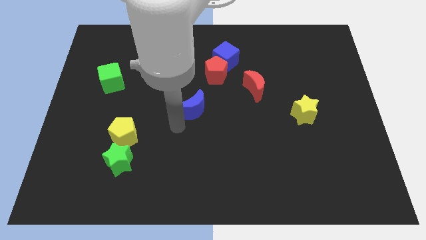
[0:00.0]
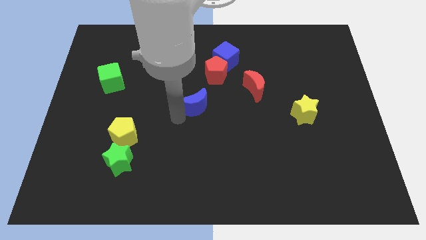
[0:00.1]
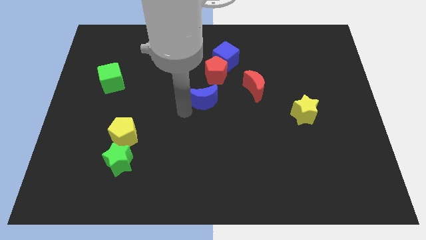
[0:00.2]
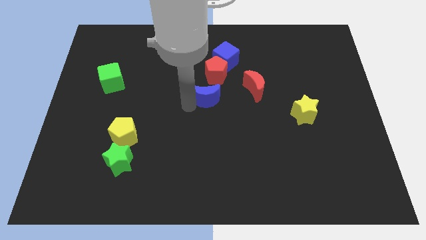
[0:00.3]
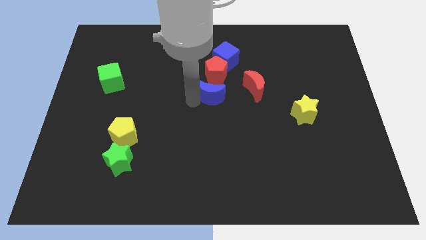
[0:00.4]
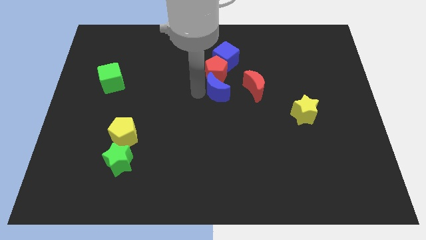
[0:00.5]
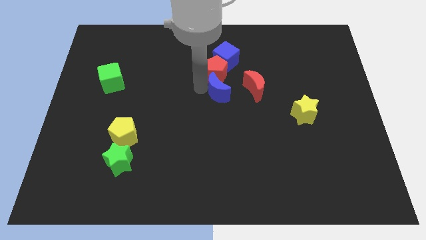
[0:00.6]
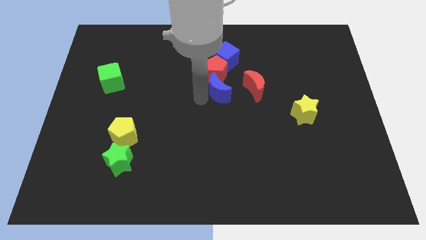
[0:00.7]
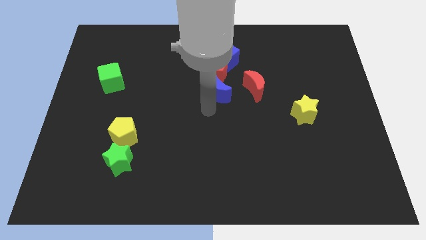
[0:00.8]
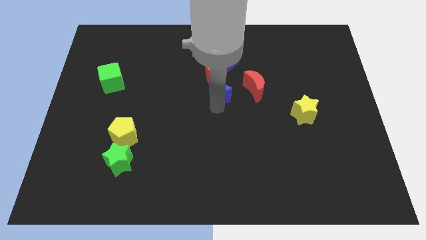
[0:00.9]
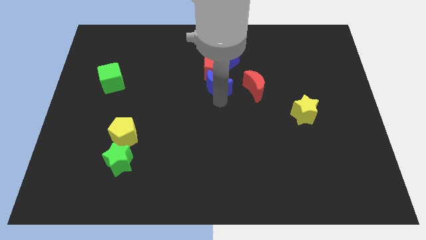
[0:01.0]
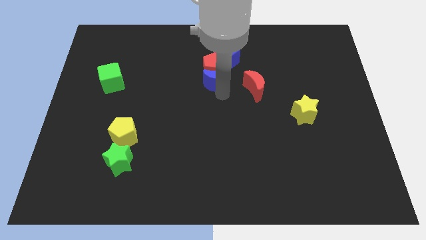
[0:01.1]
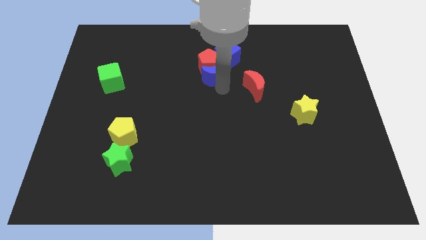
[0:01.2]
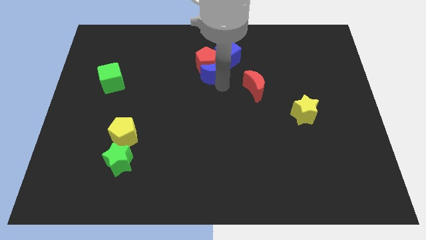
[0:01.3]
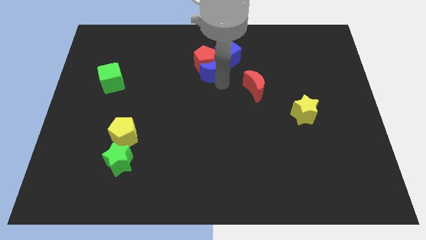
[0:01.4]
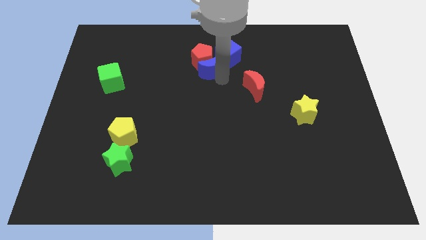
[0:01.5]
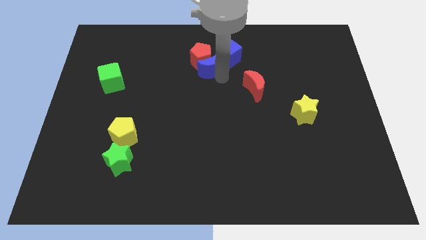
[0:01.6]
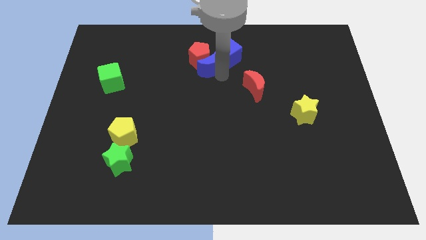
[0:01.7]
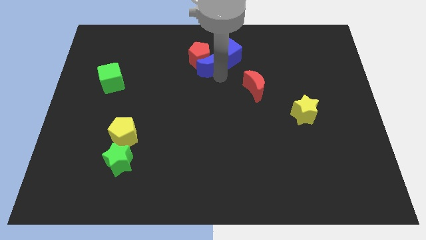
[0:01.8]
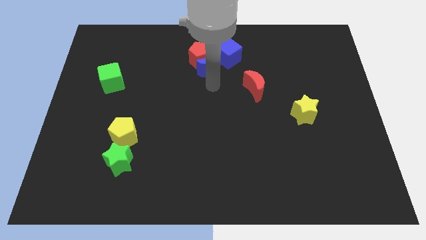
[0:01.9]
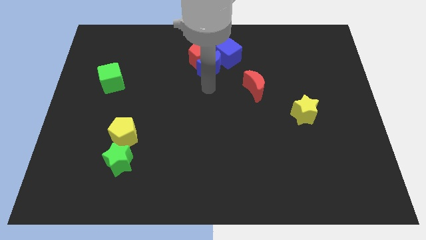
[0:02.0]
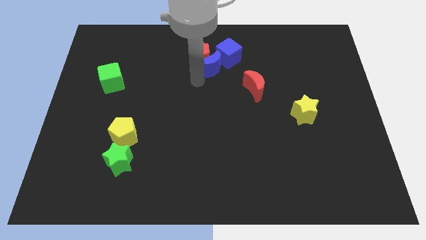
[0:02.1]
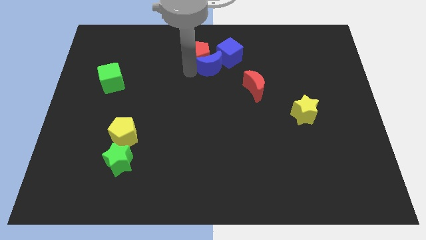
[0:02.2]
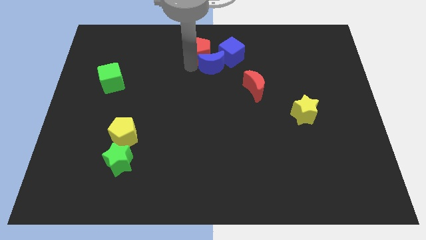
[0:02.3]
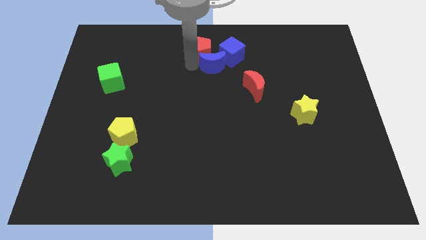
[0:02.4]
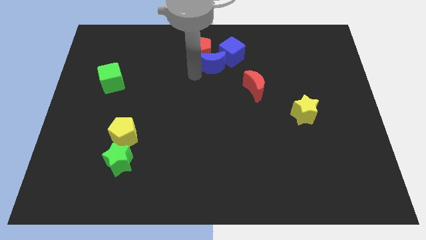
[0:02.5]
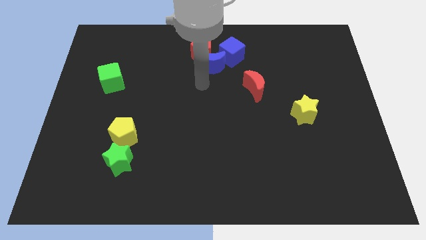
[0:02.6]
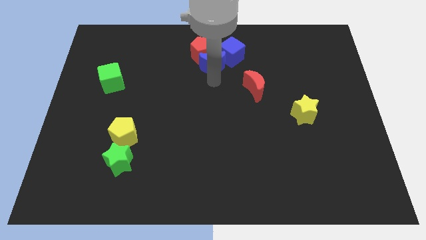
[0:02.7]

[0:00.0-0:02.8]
drag the blue moon to the top

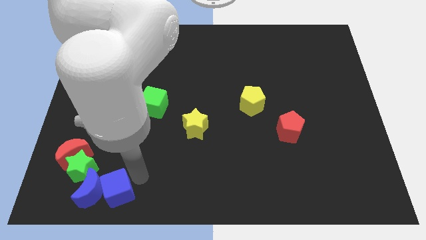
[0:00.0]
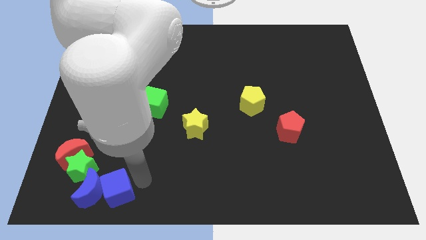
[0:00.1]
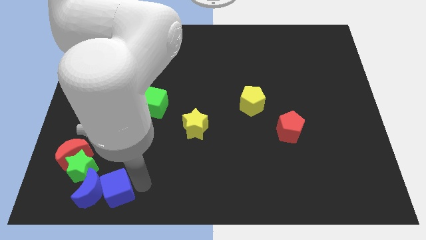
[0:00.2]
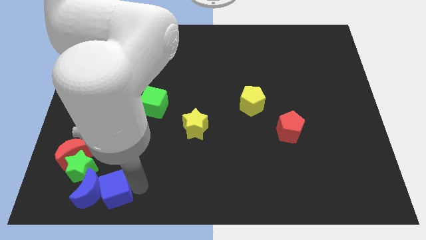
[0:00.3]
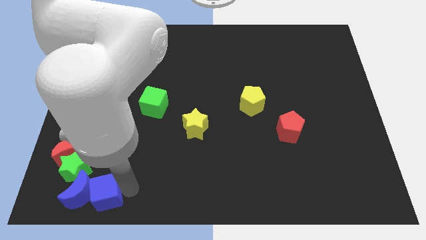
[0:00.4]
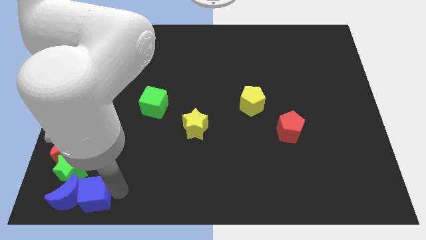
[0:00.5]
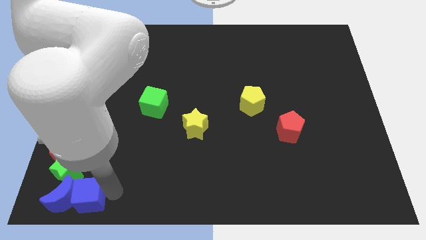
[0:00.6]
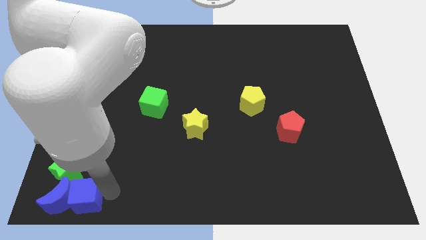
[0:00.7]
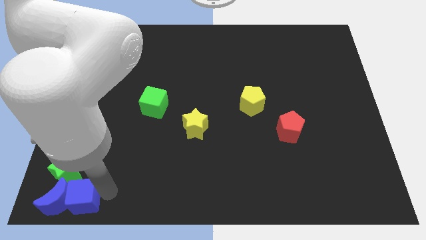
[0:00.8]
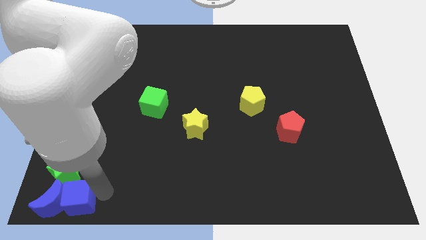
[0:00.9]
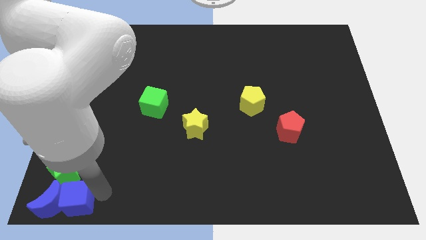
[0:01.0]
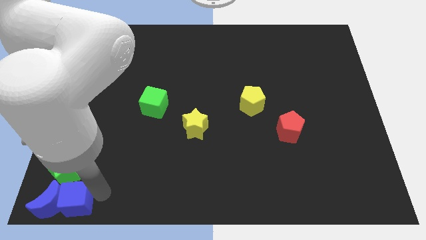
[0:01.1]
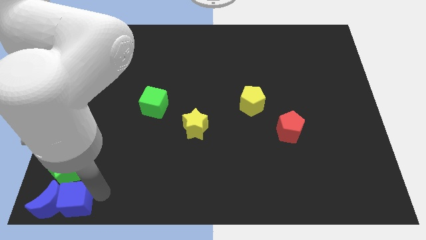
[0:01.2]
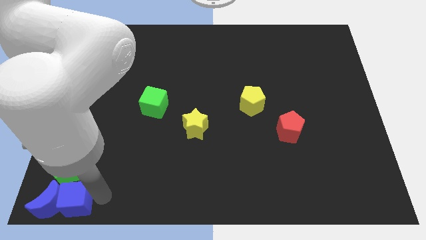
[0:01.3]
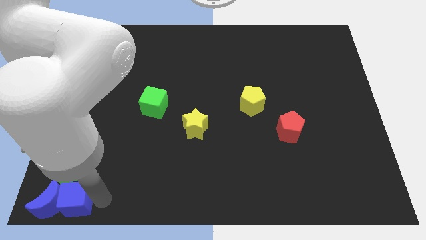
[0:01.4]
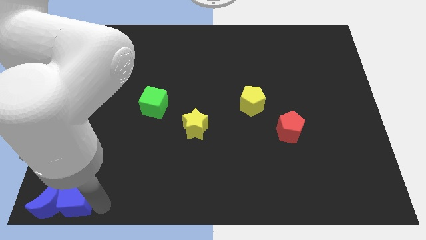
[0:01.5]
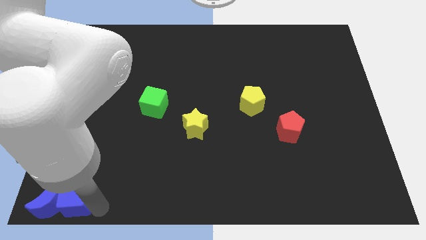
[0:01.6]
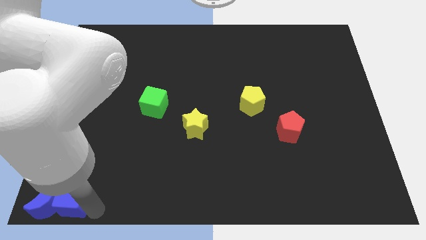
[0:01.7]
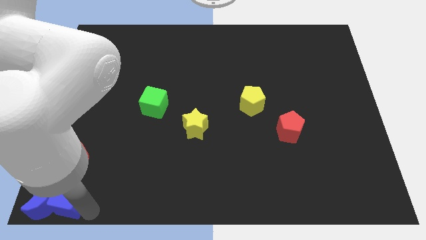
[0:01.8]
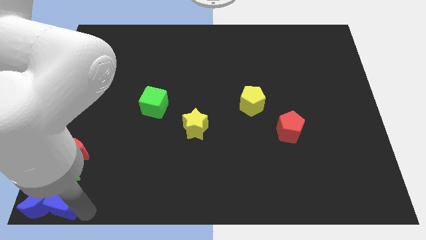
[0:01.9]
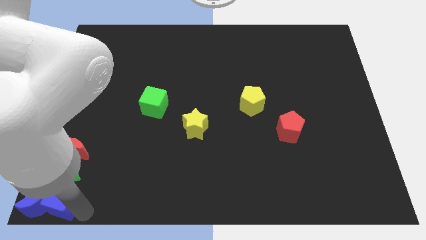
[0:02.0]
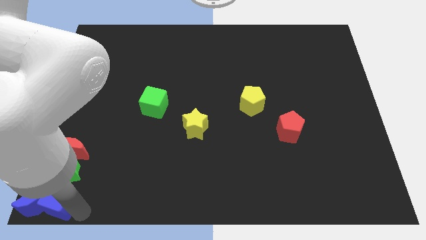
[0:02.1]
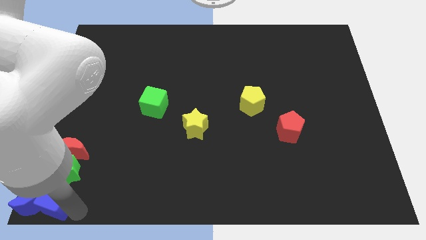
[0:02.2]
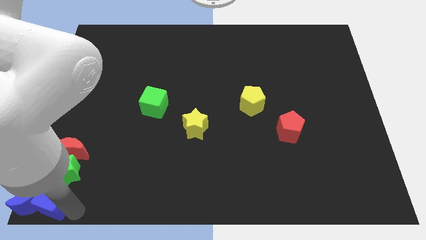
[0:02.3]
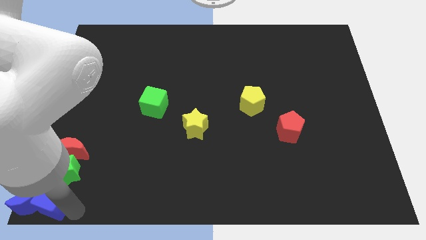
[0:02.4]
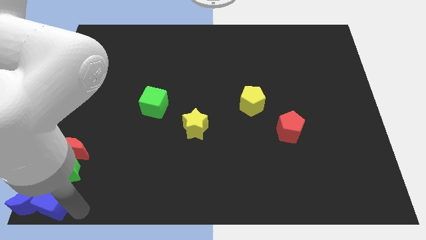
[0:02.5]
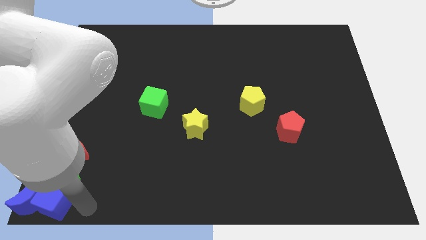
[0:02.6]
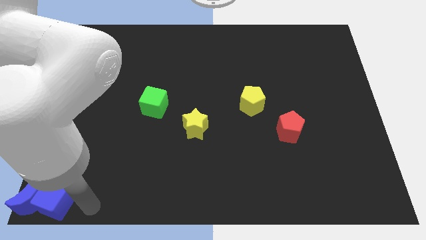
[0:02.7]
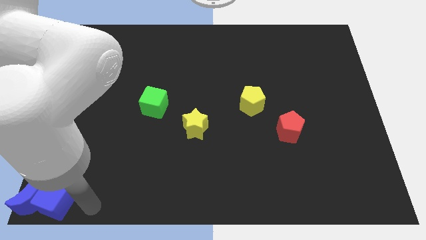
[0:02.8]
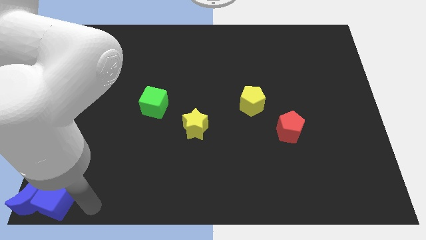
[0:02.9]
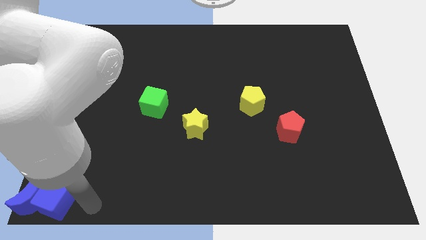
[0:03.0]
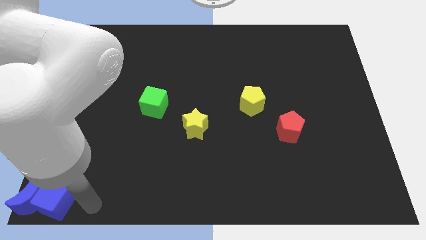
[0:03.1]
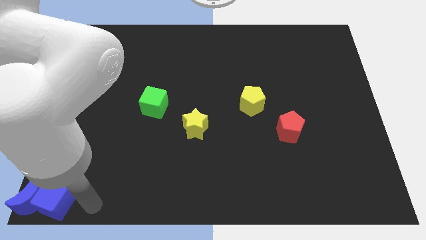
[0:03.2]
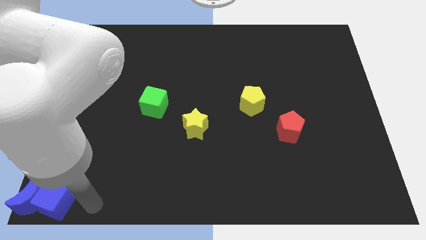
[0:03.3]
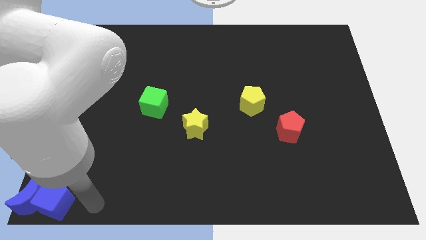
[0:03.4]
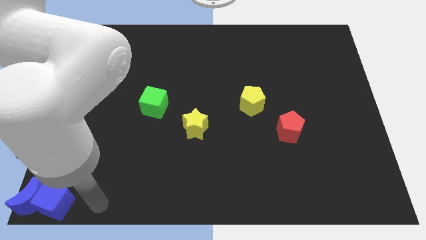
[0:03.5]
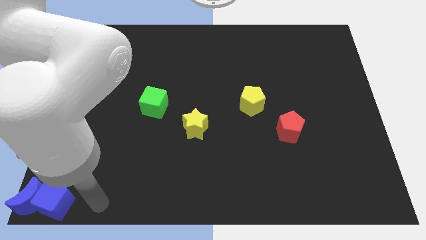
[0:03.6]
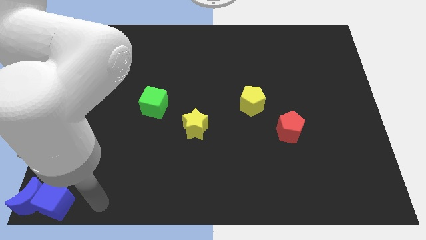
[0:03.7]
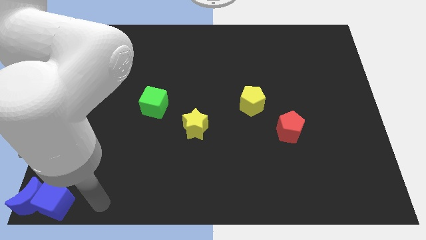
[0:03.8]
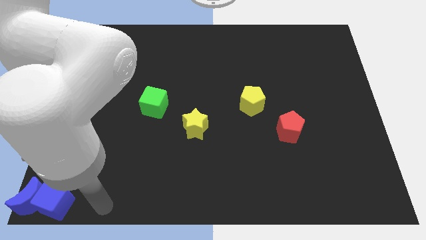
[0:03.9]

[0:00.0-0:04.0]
move the blue blocks to the bottom left corner of the board

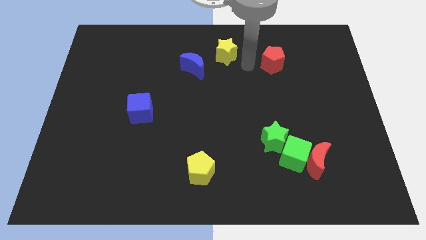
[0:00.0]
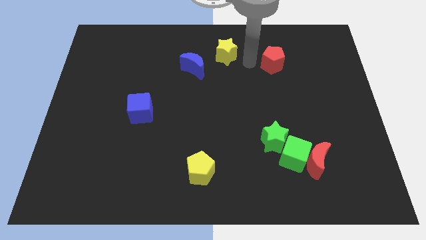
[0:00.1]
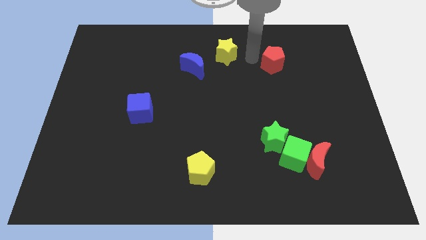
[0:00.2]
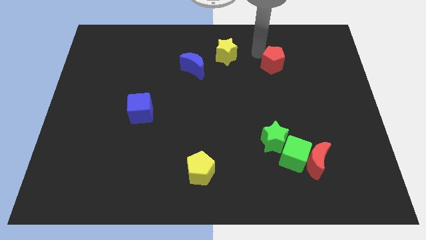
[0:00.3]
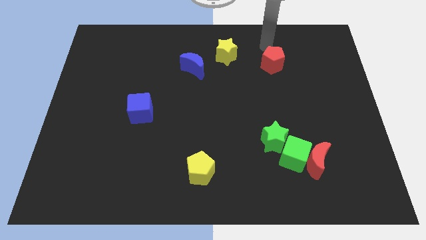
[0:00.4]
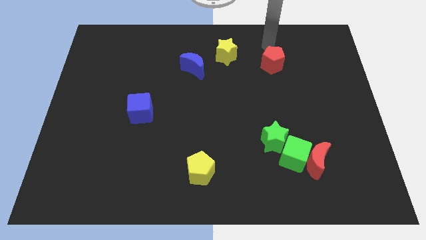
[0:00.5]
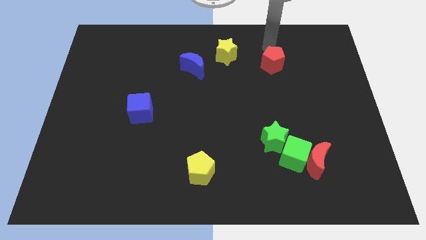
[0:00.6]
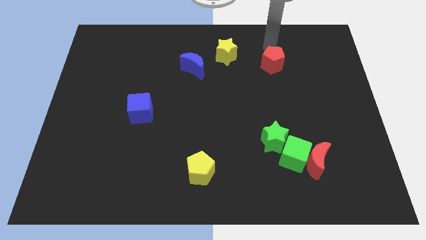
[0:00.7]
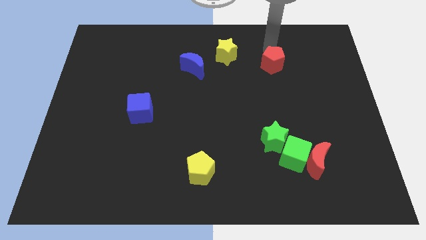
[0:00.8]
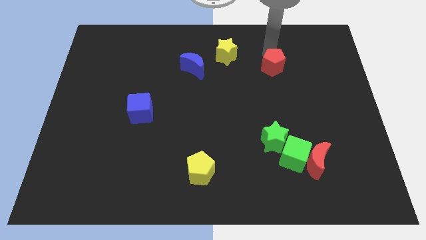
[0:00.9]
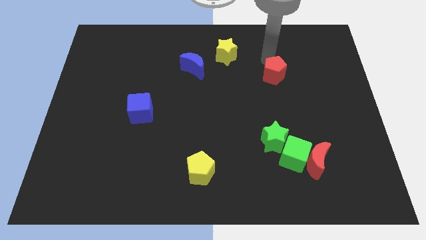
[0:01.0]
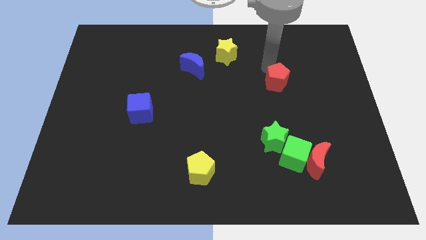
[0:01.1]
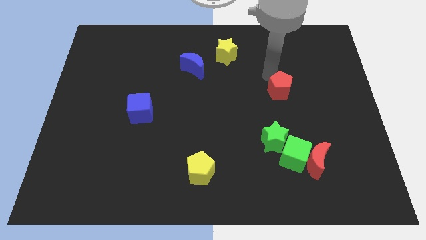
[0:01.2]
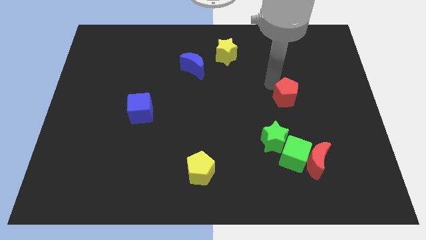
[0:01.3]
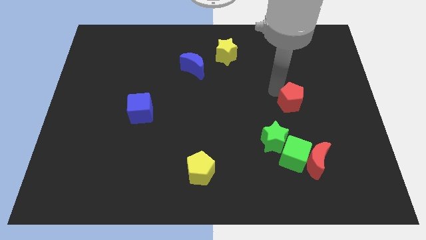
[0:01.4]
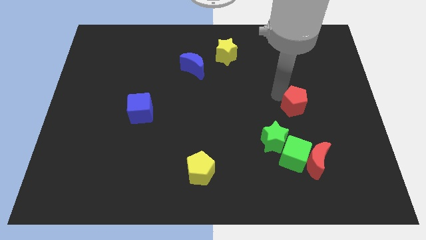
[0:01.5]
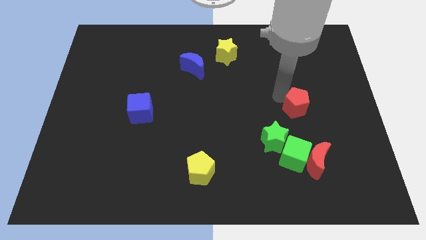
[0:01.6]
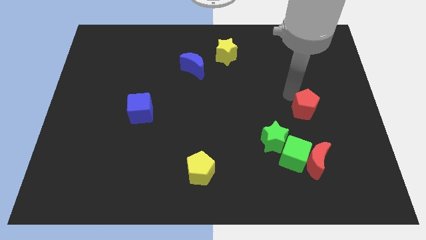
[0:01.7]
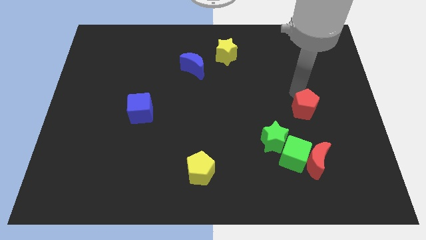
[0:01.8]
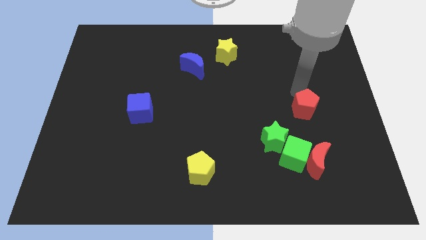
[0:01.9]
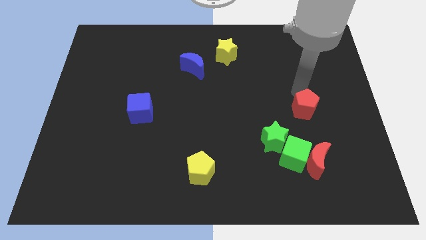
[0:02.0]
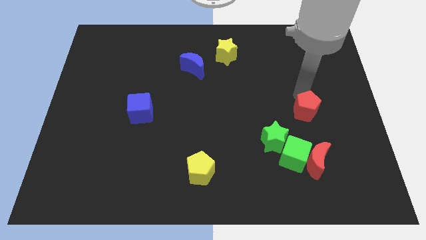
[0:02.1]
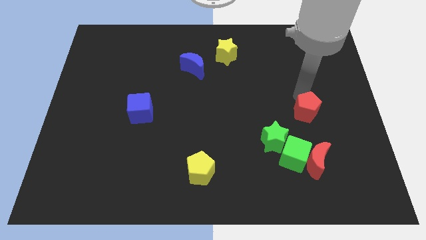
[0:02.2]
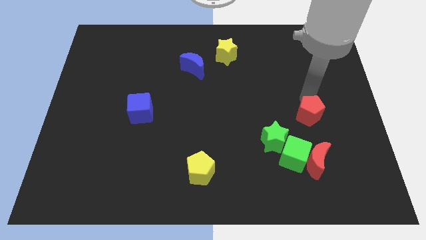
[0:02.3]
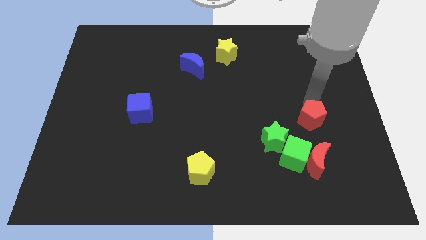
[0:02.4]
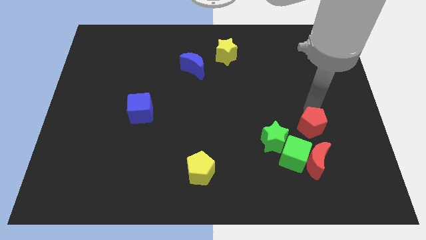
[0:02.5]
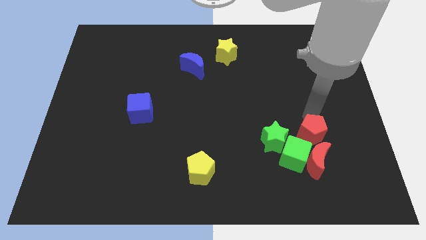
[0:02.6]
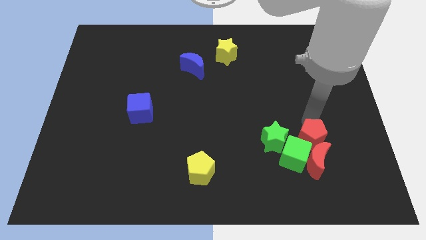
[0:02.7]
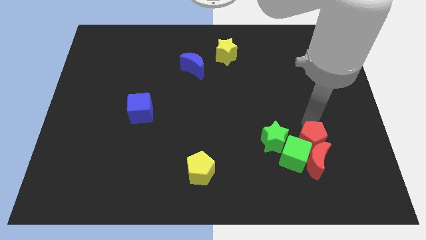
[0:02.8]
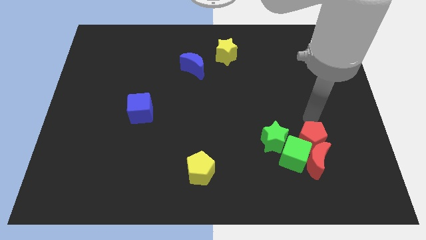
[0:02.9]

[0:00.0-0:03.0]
take the red pentagon close to the top of the red moon
